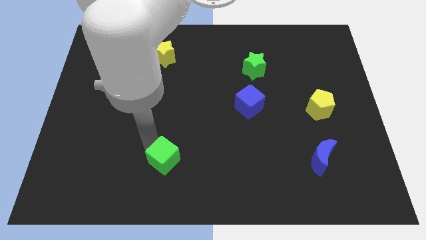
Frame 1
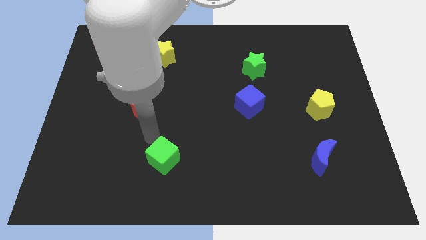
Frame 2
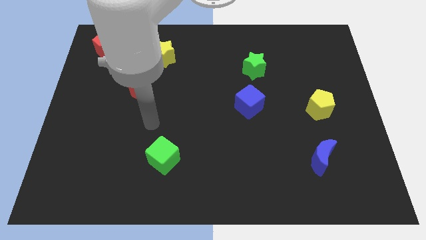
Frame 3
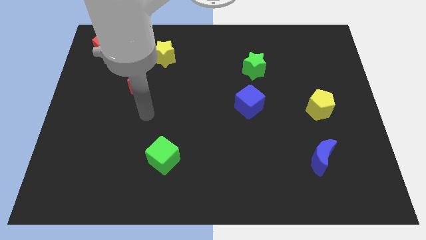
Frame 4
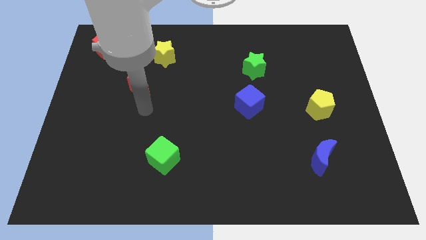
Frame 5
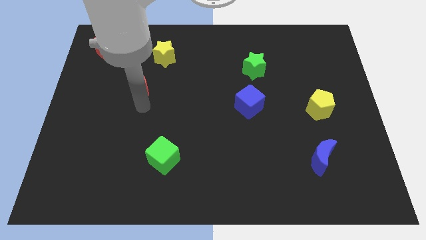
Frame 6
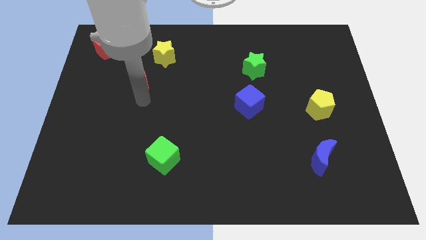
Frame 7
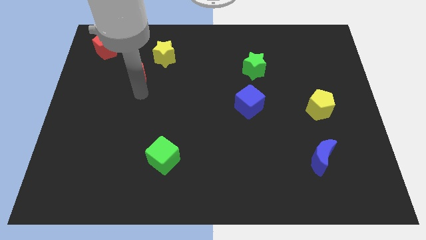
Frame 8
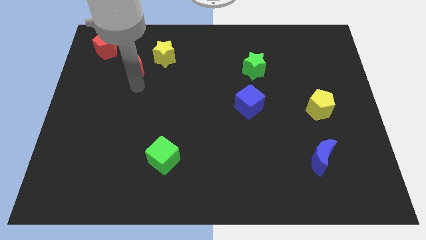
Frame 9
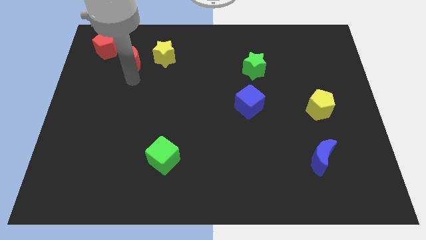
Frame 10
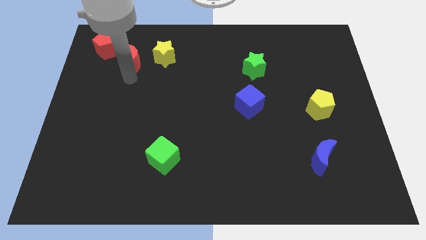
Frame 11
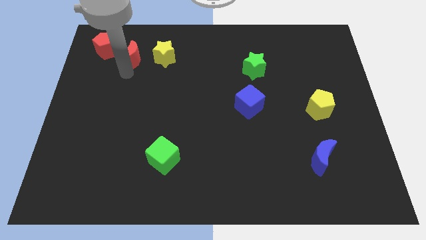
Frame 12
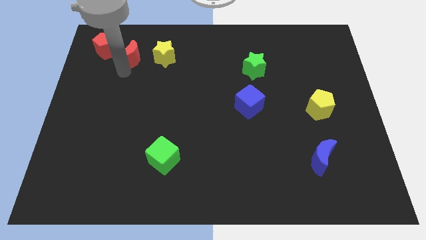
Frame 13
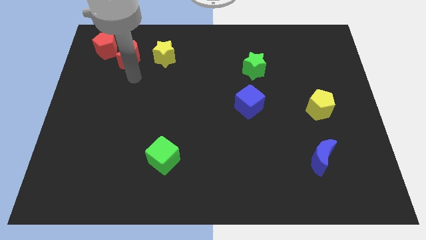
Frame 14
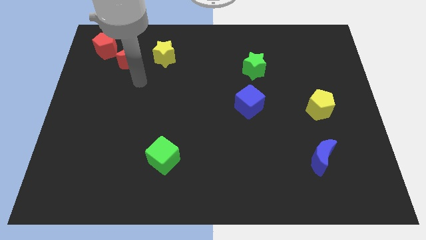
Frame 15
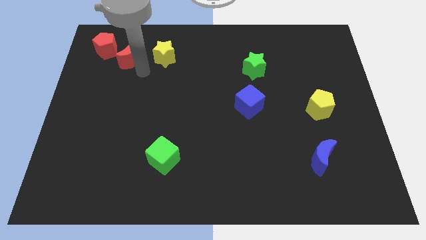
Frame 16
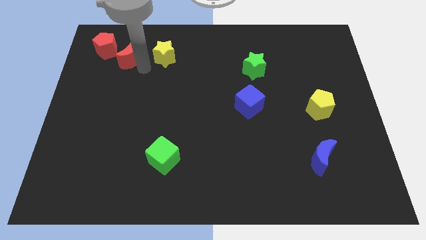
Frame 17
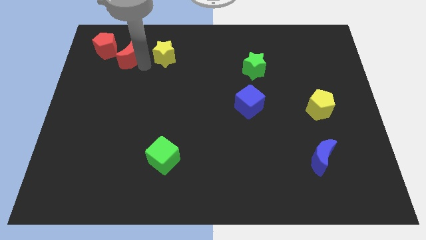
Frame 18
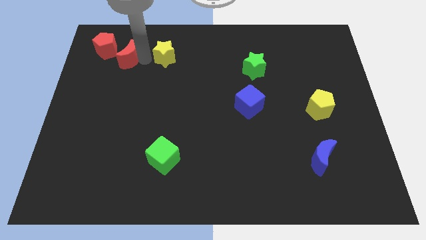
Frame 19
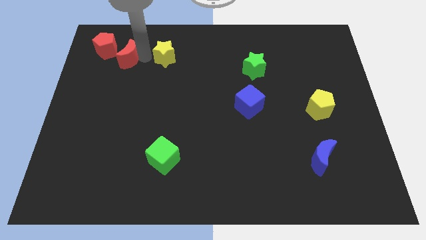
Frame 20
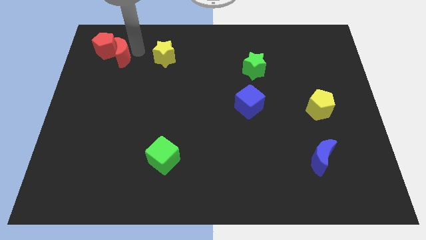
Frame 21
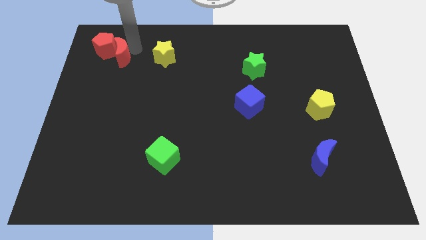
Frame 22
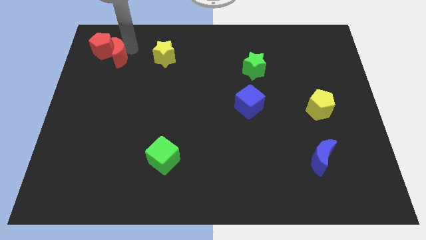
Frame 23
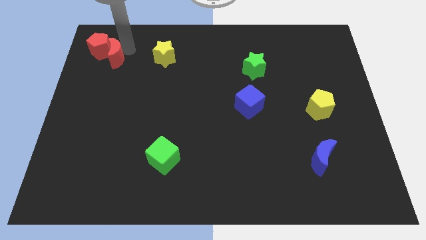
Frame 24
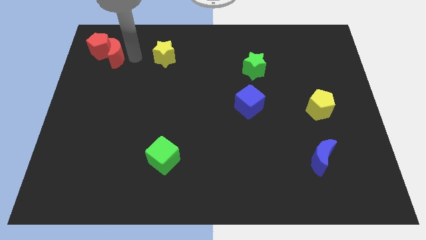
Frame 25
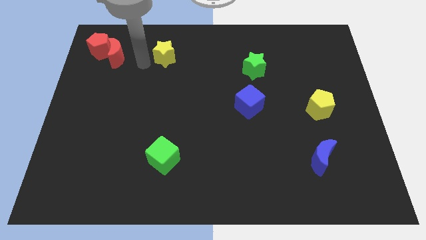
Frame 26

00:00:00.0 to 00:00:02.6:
push the red crescent into the red pentagon

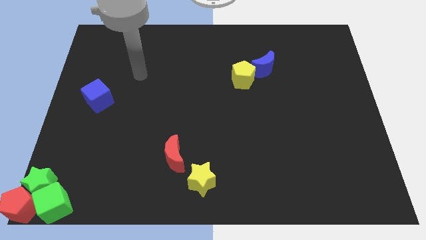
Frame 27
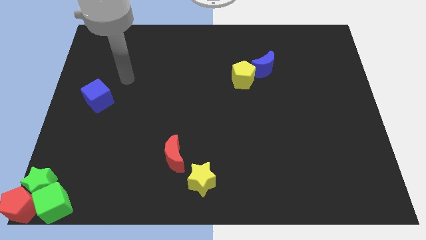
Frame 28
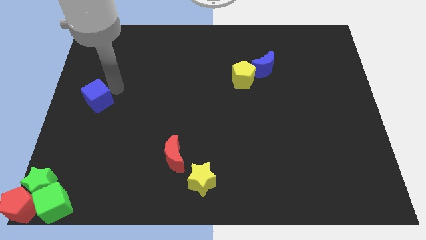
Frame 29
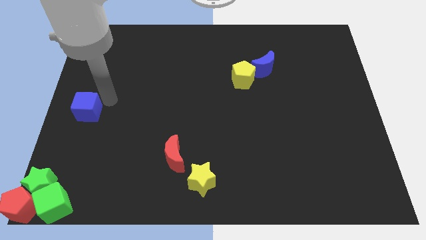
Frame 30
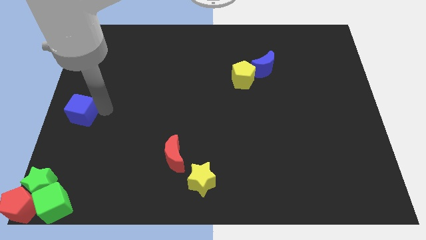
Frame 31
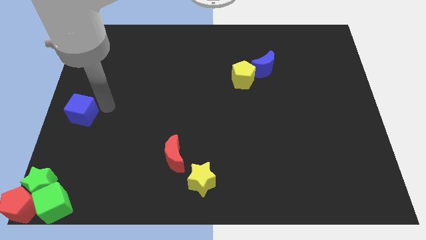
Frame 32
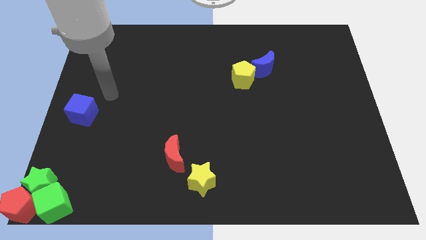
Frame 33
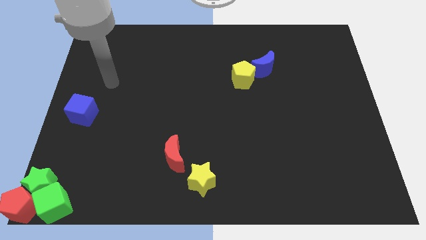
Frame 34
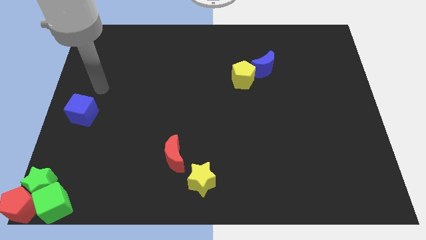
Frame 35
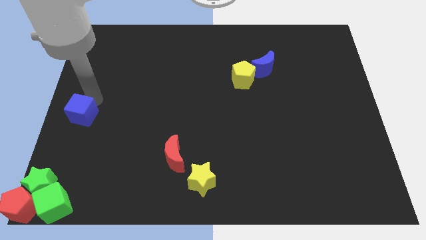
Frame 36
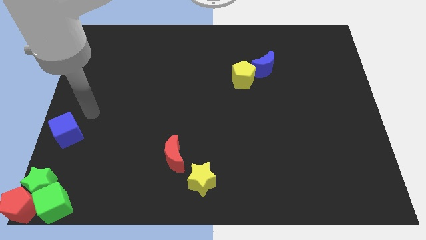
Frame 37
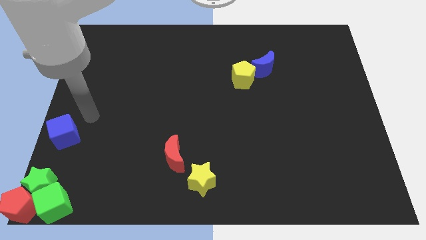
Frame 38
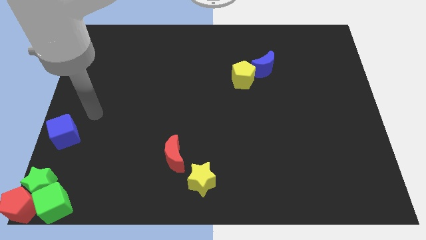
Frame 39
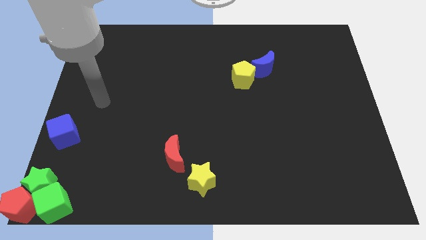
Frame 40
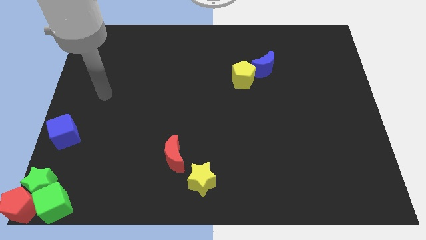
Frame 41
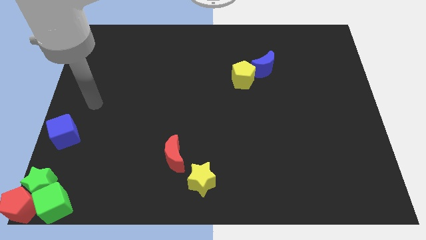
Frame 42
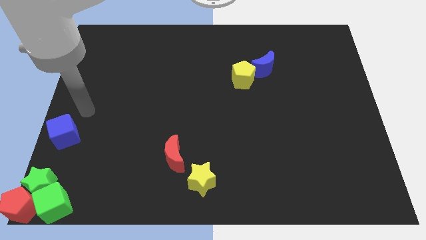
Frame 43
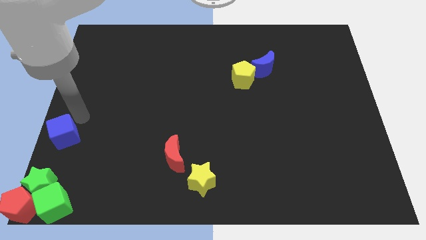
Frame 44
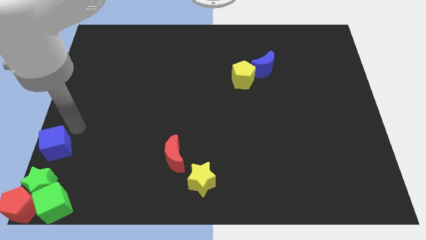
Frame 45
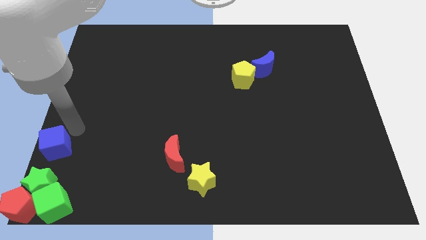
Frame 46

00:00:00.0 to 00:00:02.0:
push the blue cube to the top of the green star

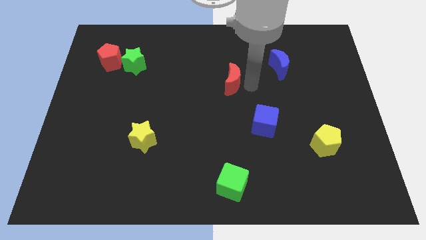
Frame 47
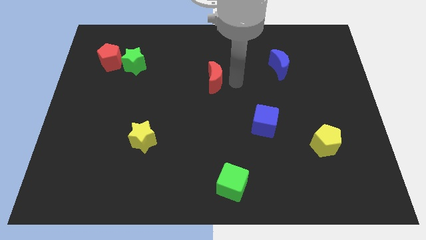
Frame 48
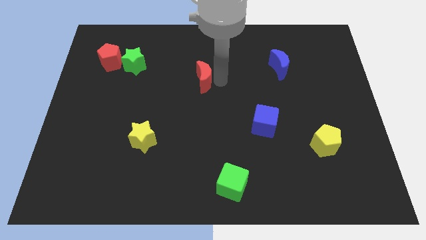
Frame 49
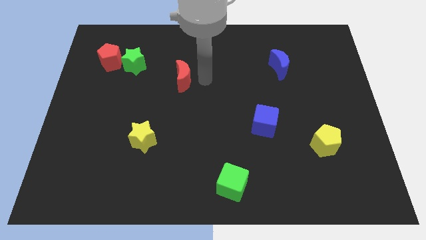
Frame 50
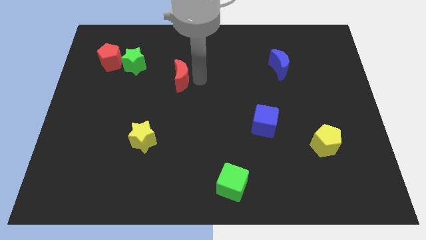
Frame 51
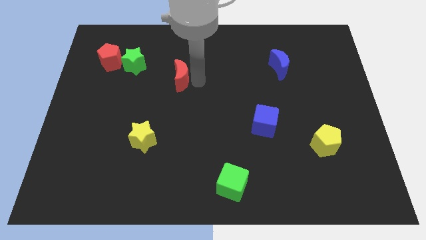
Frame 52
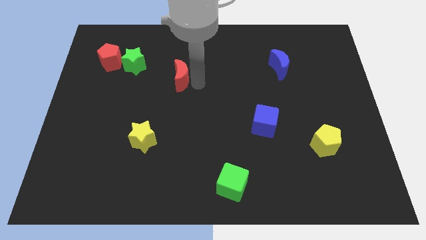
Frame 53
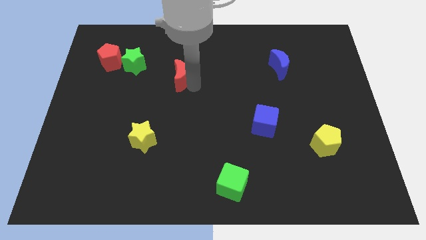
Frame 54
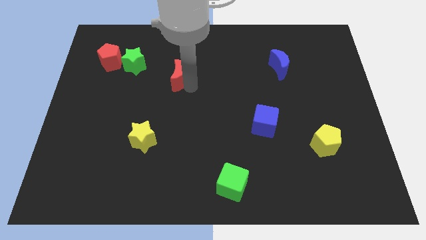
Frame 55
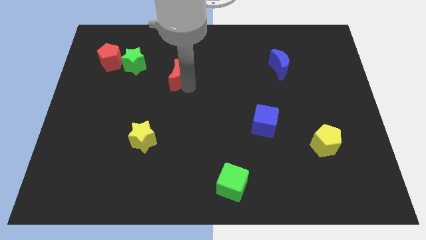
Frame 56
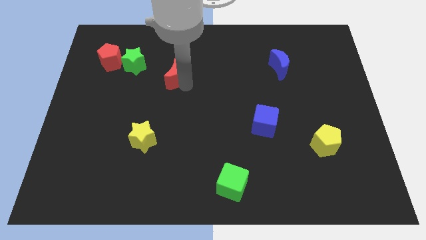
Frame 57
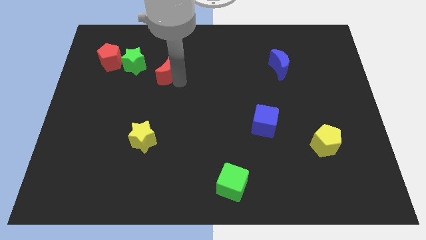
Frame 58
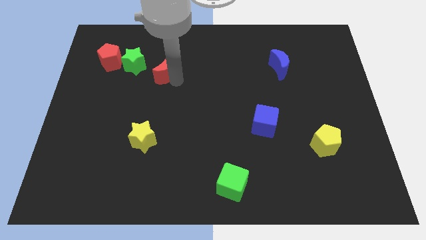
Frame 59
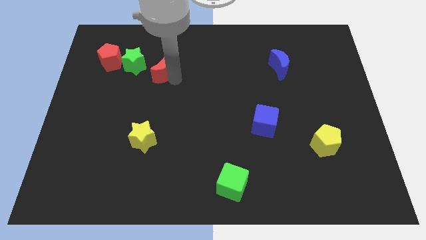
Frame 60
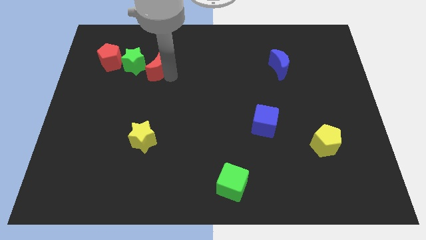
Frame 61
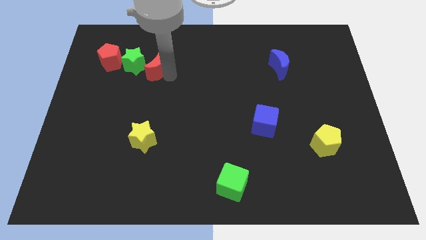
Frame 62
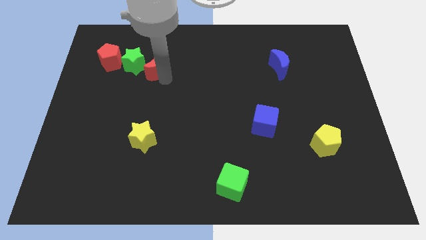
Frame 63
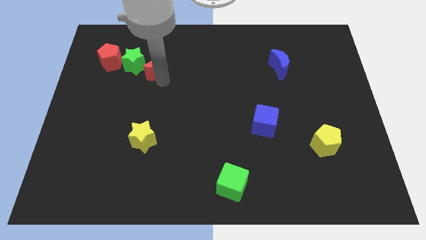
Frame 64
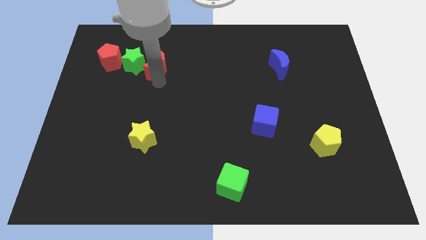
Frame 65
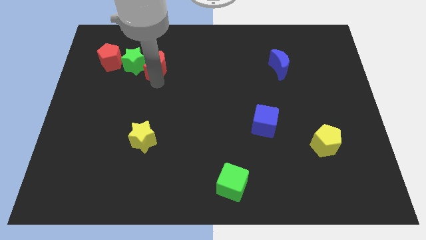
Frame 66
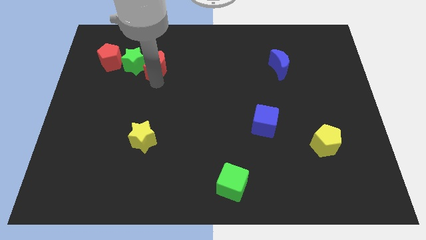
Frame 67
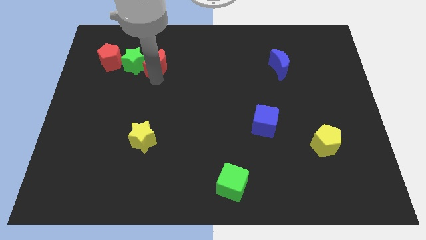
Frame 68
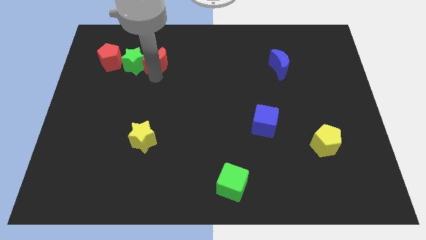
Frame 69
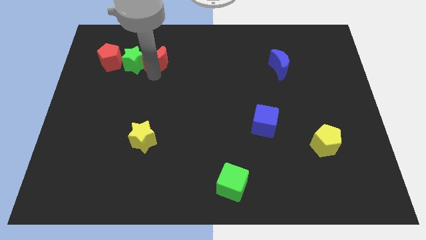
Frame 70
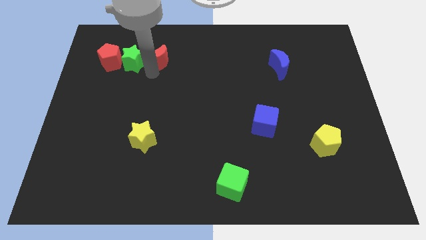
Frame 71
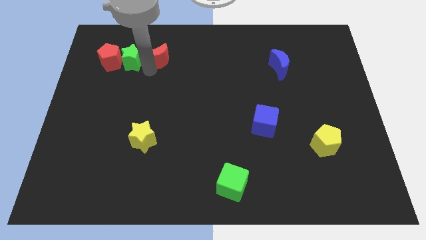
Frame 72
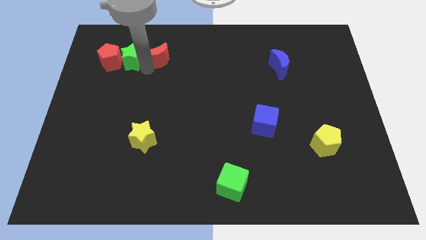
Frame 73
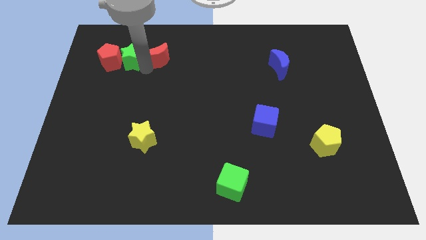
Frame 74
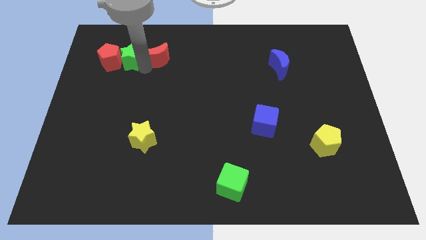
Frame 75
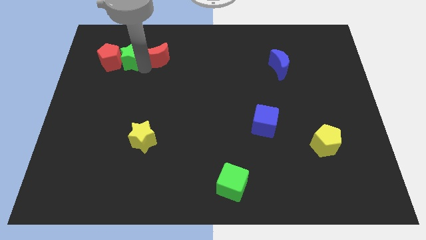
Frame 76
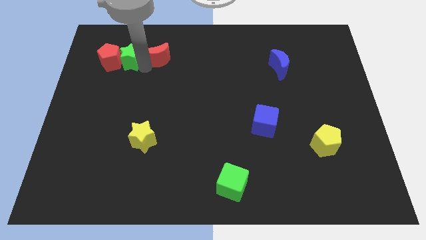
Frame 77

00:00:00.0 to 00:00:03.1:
move red moon close to the green star

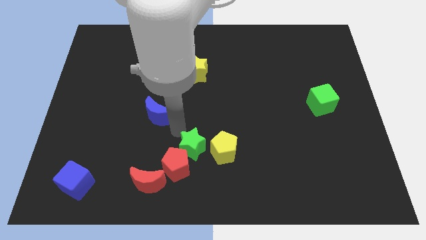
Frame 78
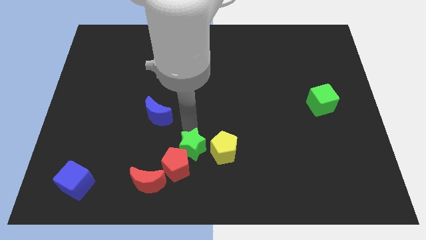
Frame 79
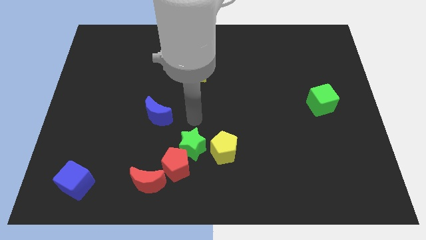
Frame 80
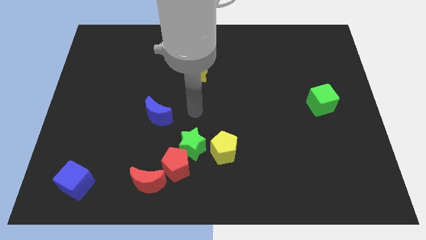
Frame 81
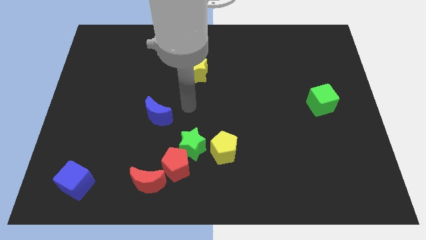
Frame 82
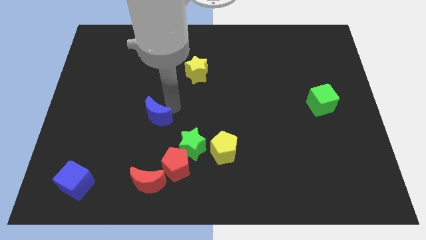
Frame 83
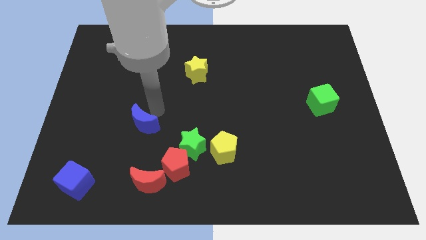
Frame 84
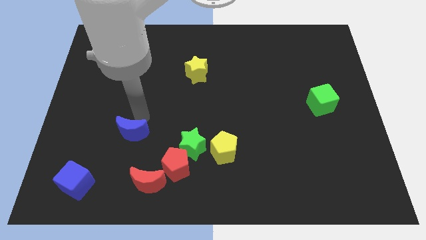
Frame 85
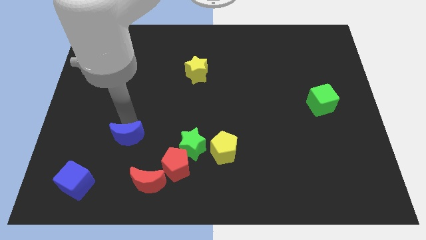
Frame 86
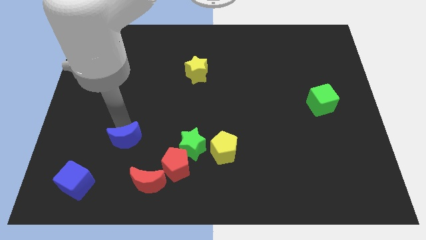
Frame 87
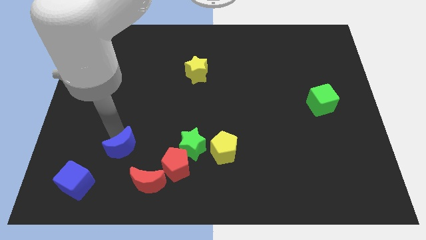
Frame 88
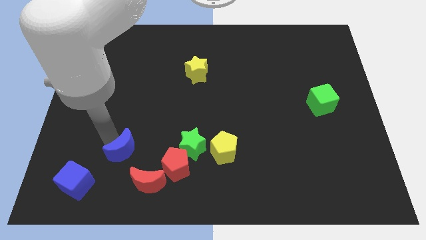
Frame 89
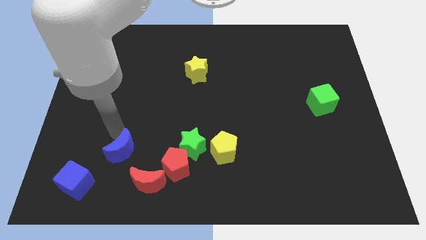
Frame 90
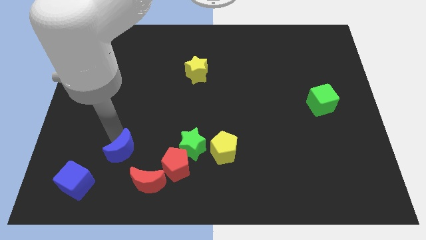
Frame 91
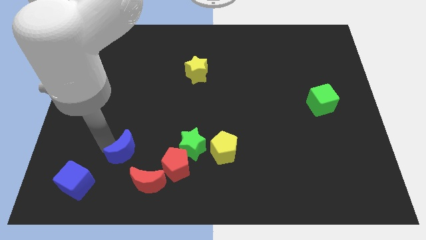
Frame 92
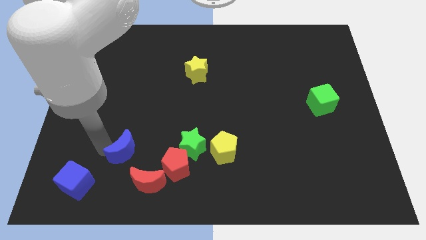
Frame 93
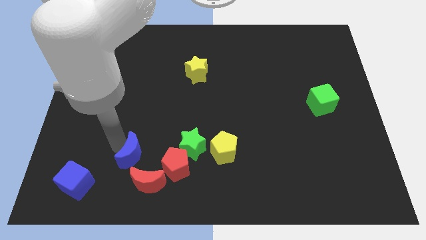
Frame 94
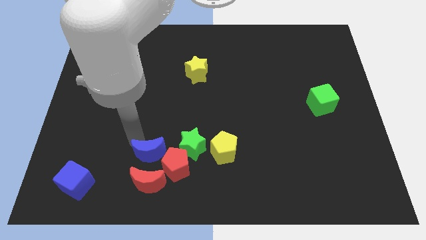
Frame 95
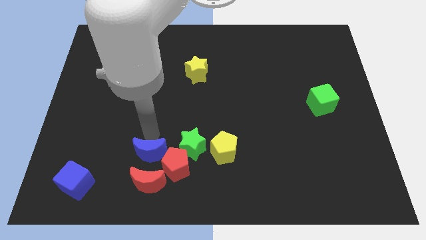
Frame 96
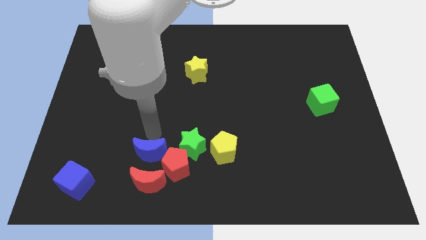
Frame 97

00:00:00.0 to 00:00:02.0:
place the blue moon vertically to the red moon
